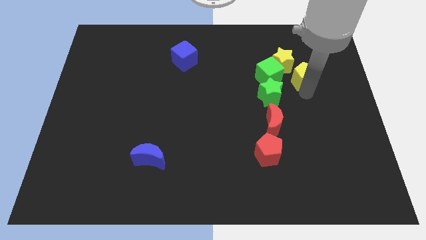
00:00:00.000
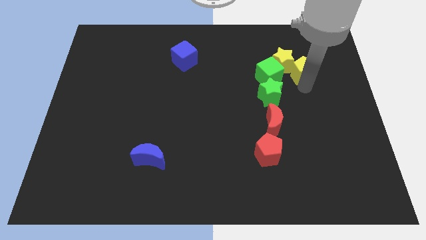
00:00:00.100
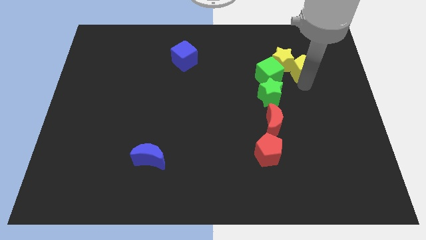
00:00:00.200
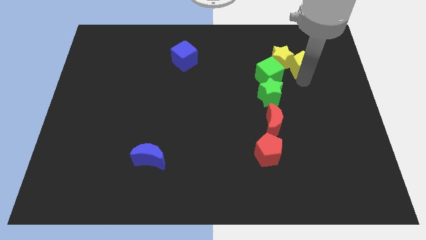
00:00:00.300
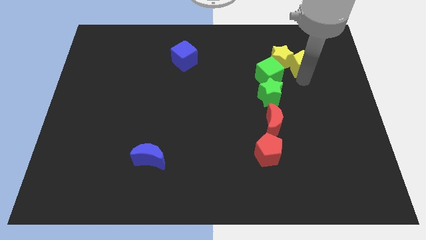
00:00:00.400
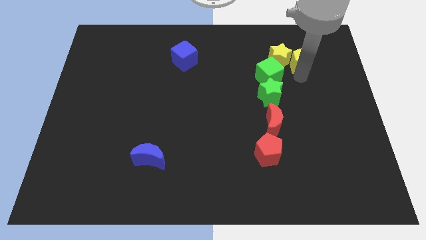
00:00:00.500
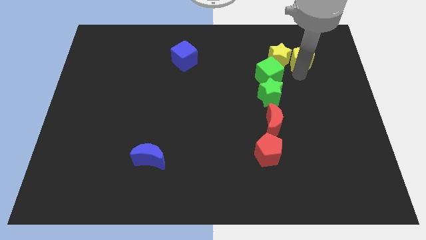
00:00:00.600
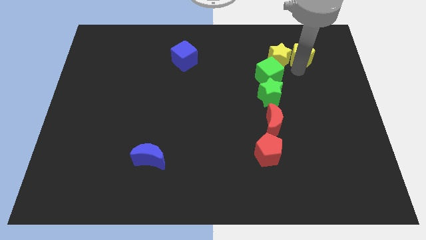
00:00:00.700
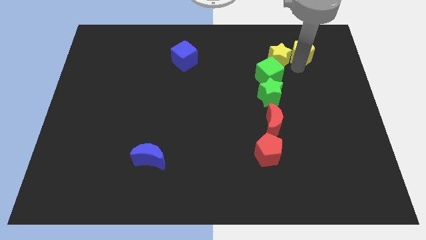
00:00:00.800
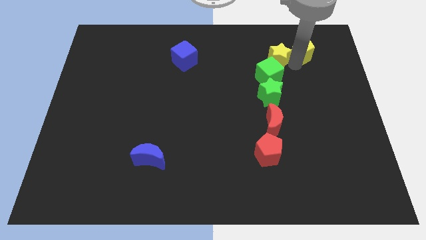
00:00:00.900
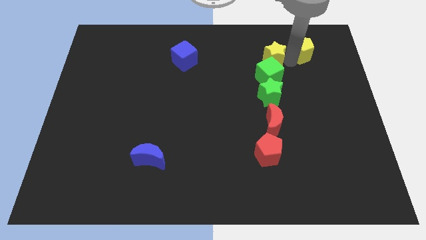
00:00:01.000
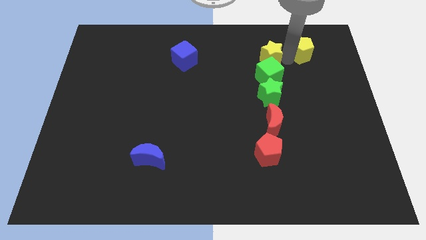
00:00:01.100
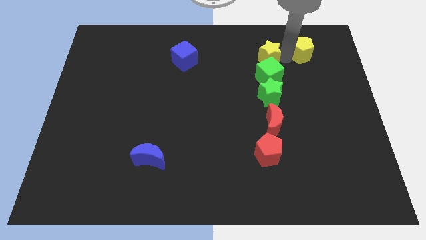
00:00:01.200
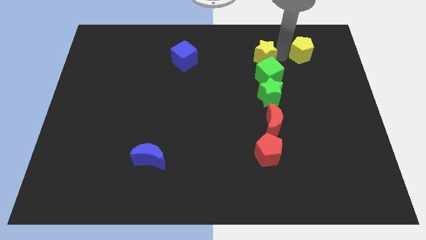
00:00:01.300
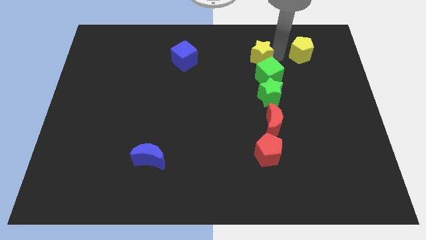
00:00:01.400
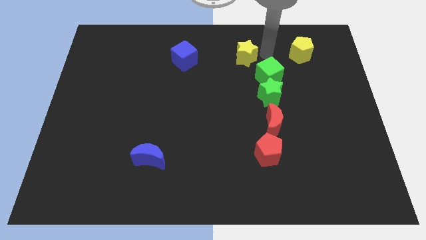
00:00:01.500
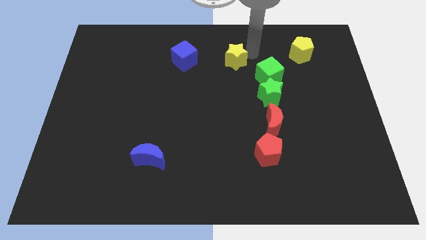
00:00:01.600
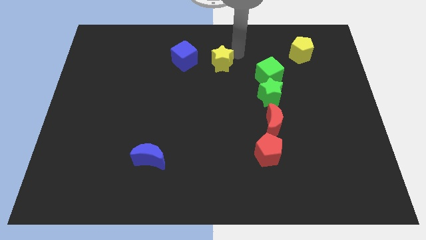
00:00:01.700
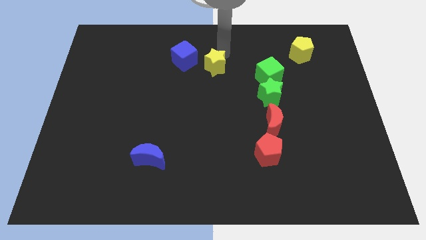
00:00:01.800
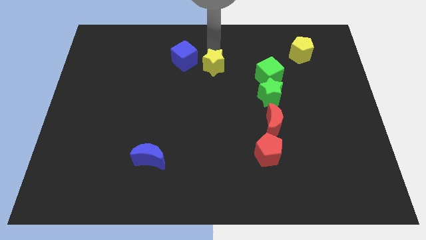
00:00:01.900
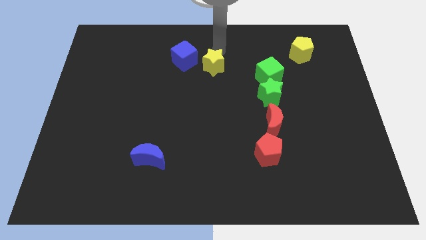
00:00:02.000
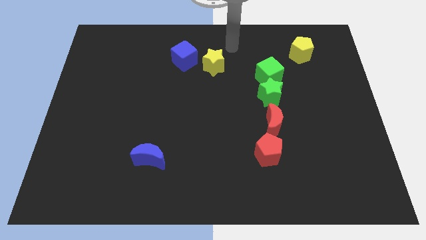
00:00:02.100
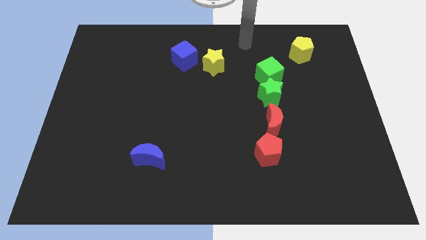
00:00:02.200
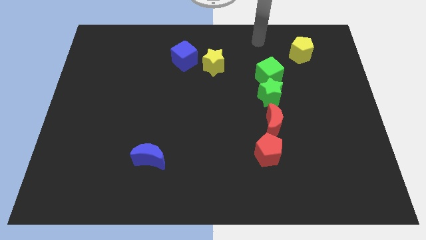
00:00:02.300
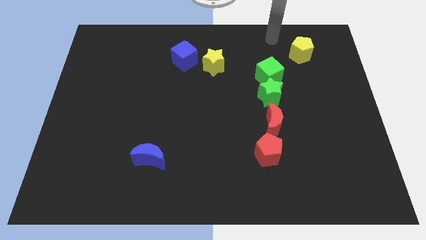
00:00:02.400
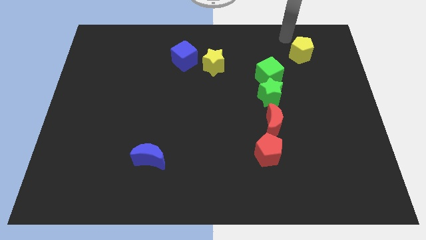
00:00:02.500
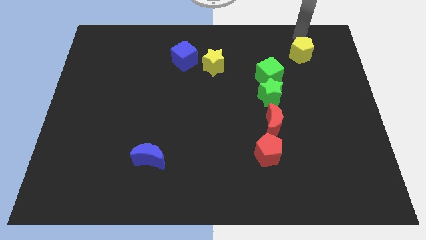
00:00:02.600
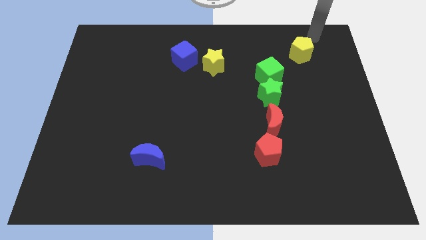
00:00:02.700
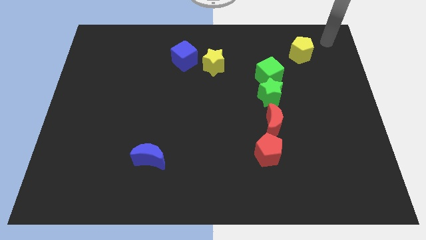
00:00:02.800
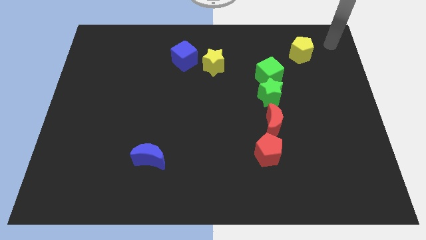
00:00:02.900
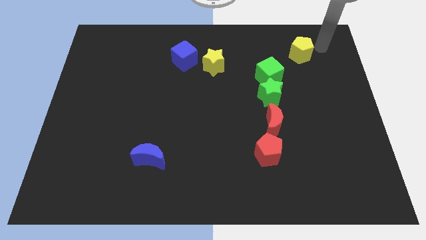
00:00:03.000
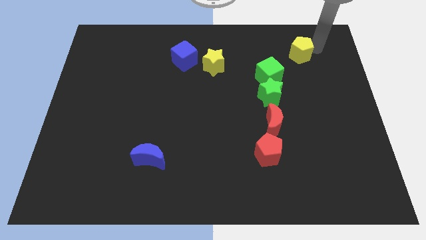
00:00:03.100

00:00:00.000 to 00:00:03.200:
separate yellow blocks from each other

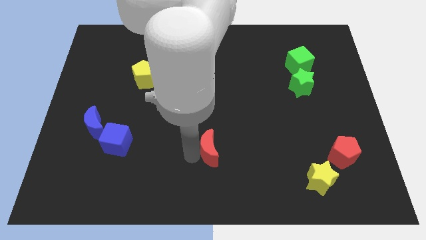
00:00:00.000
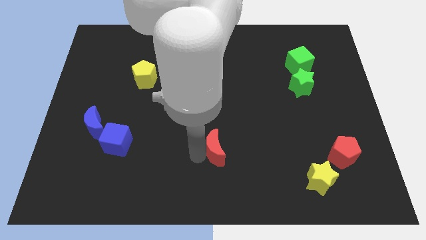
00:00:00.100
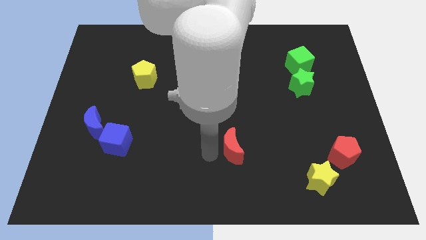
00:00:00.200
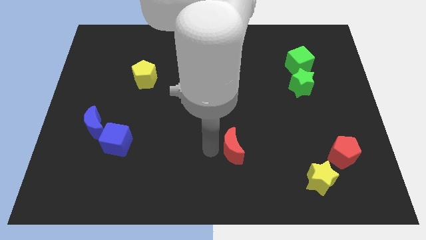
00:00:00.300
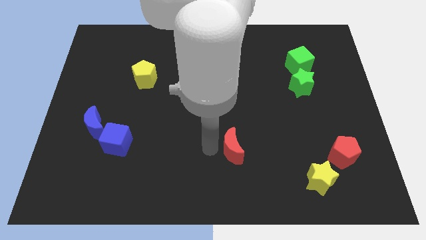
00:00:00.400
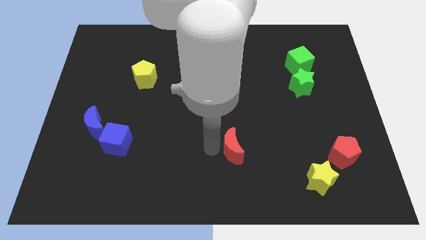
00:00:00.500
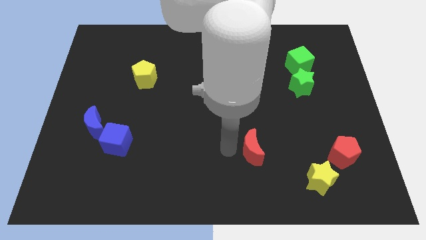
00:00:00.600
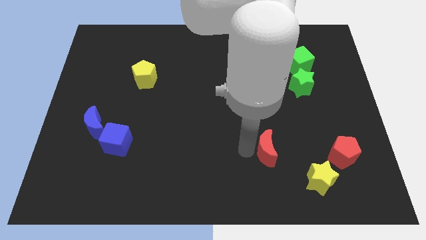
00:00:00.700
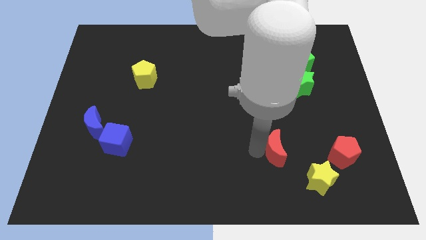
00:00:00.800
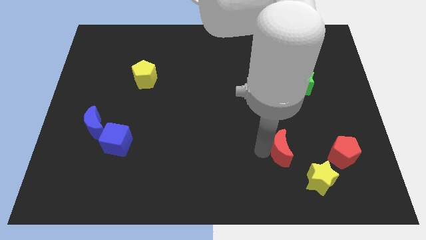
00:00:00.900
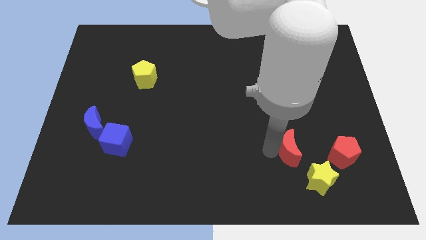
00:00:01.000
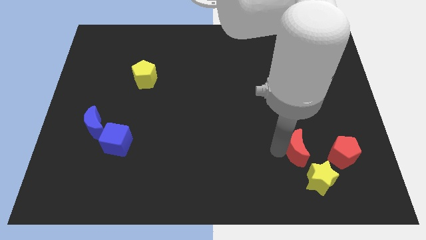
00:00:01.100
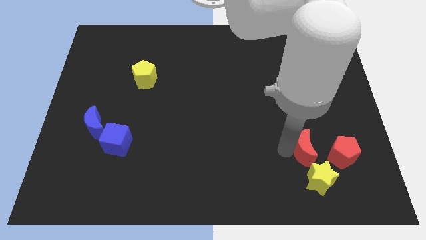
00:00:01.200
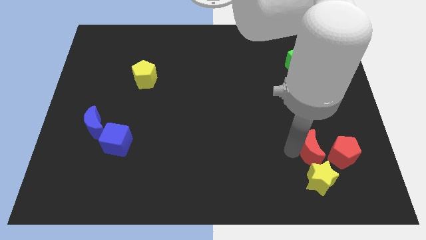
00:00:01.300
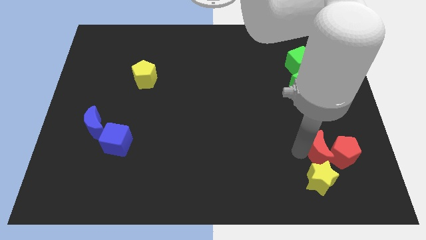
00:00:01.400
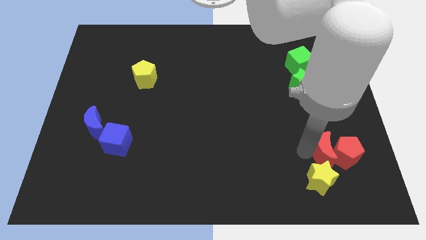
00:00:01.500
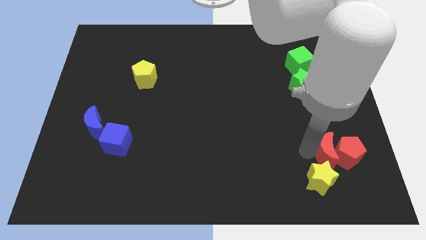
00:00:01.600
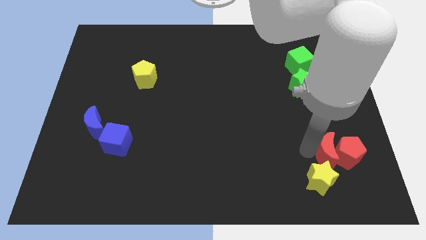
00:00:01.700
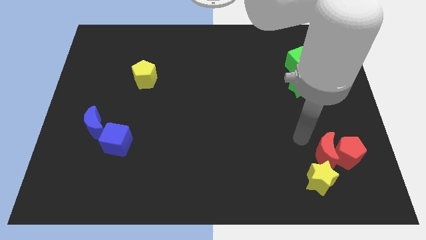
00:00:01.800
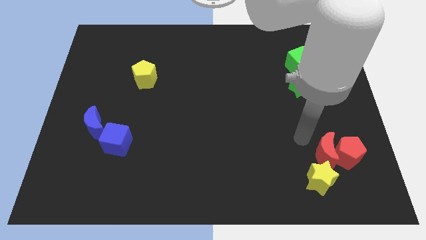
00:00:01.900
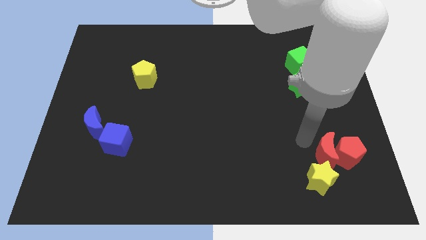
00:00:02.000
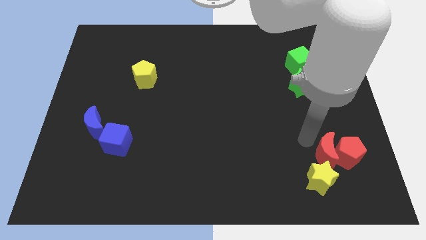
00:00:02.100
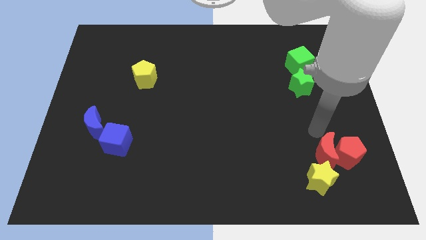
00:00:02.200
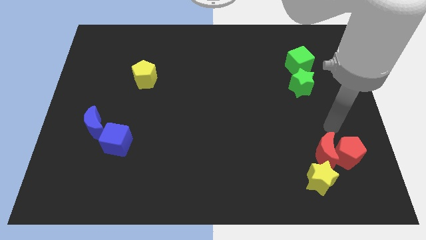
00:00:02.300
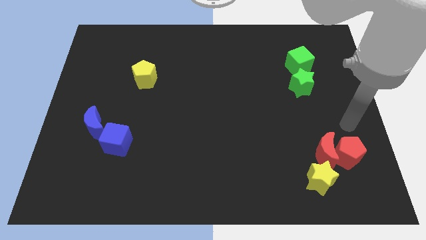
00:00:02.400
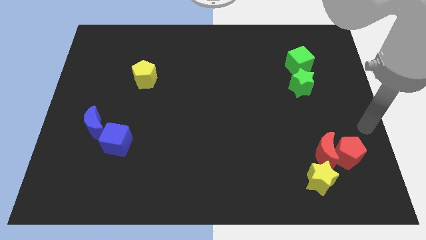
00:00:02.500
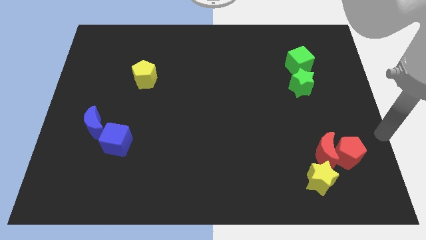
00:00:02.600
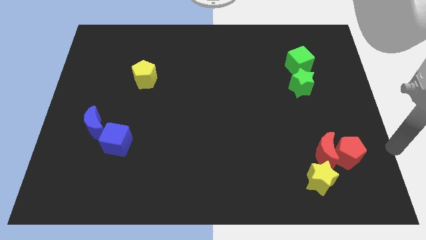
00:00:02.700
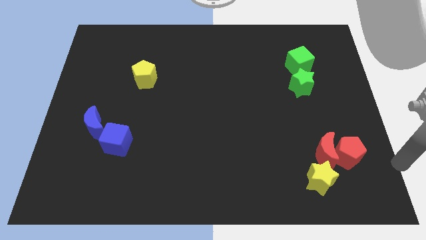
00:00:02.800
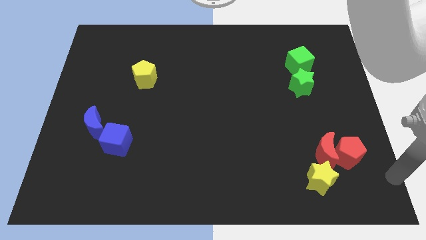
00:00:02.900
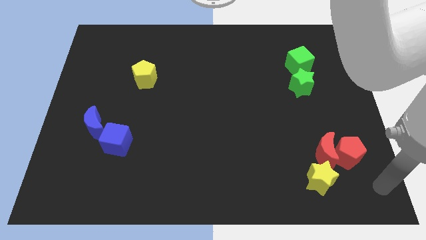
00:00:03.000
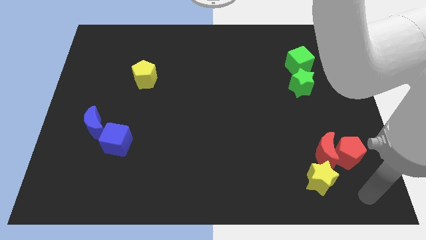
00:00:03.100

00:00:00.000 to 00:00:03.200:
move the red crescent into the red pentagon

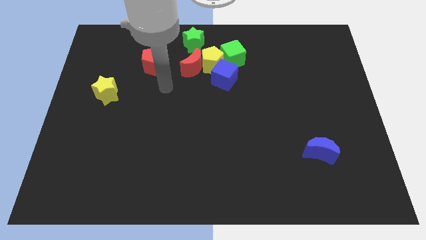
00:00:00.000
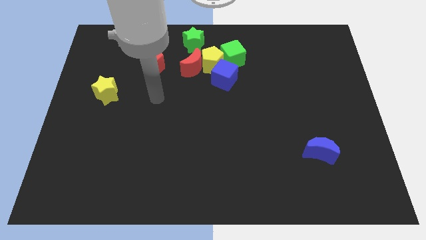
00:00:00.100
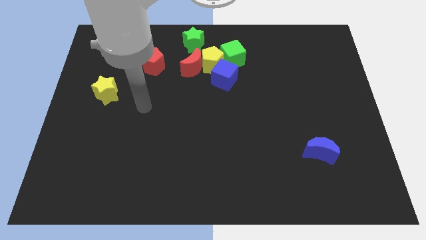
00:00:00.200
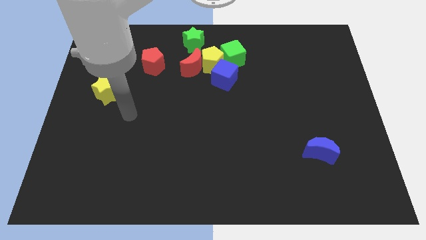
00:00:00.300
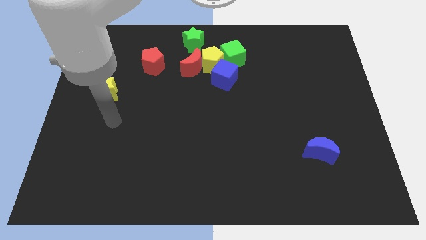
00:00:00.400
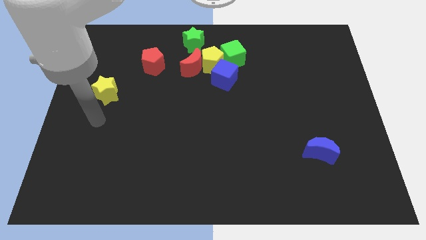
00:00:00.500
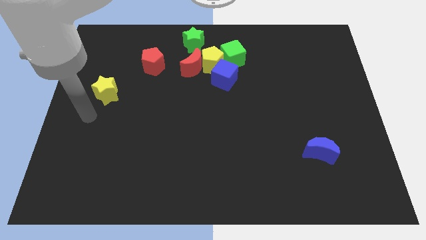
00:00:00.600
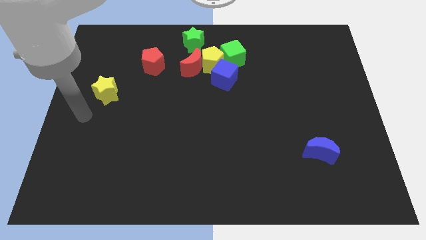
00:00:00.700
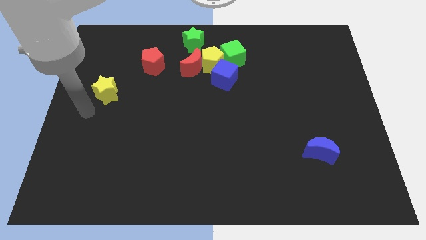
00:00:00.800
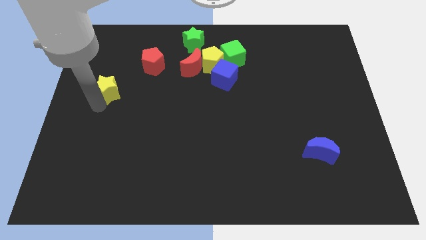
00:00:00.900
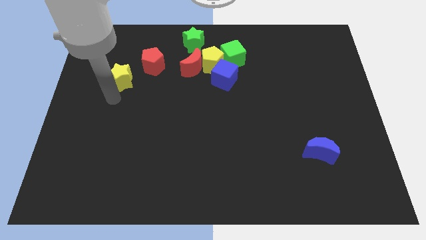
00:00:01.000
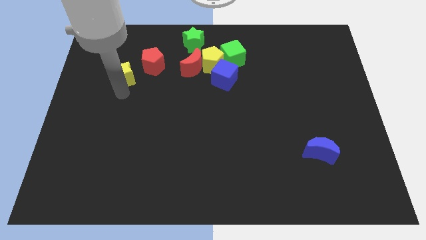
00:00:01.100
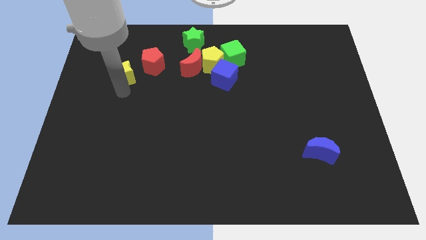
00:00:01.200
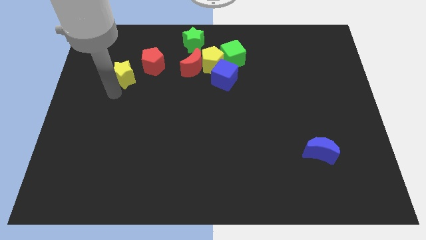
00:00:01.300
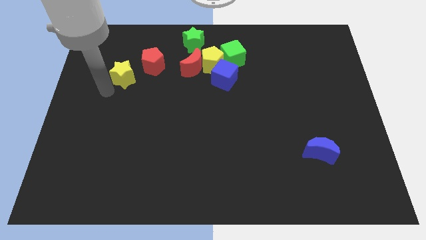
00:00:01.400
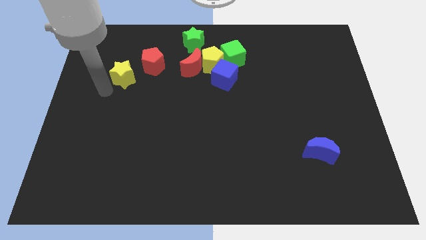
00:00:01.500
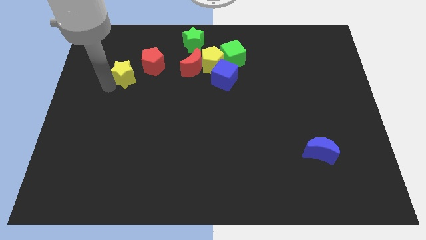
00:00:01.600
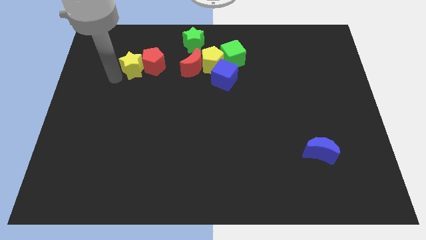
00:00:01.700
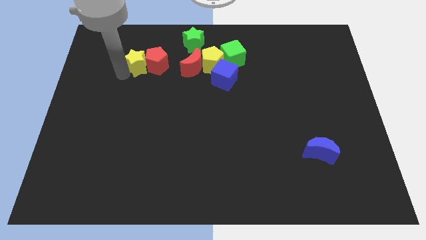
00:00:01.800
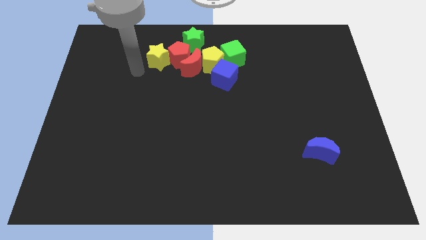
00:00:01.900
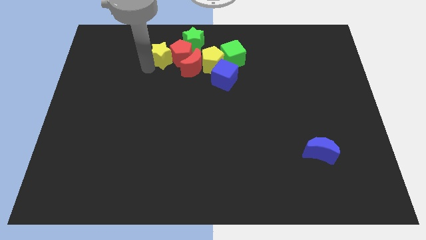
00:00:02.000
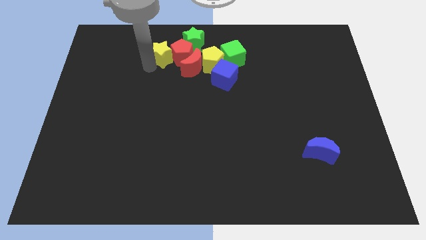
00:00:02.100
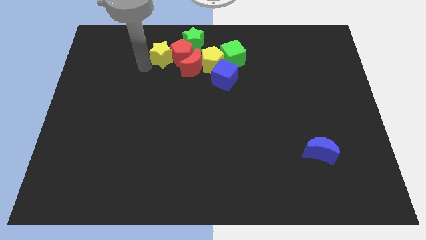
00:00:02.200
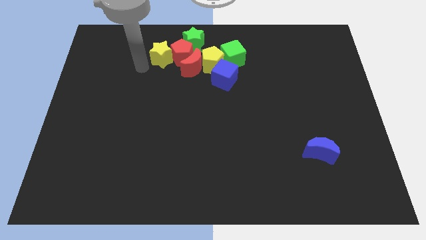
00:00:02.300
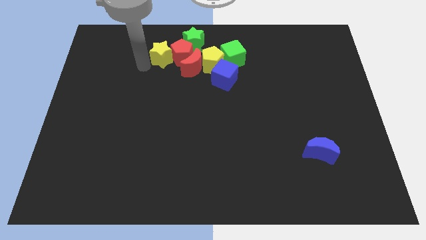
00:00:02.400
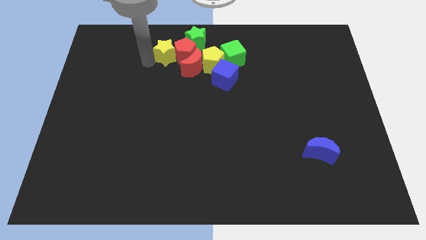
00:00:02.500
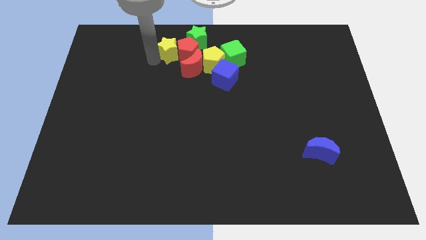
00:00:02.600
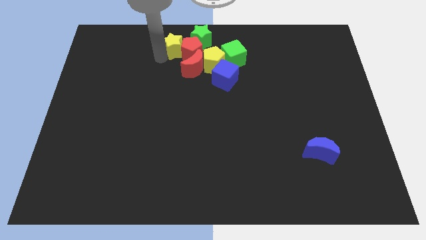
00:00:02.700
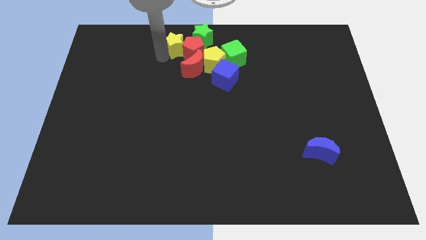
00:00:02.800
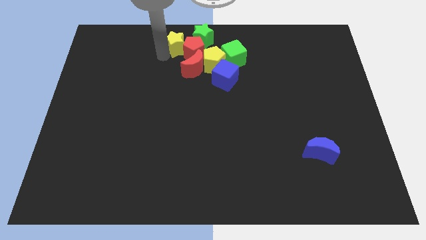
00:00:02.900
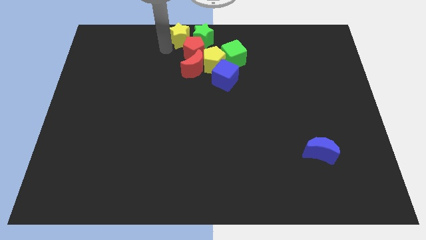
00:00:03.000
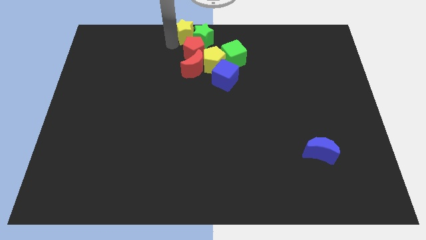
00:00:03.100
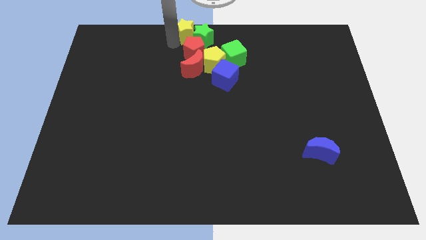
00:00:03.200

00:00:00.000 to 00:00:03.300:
push the red pentagon into the green star with the yellow star
